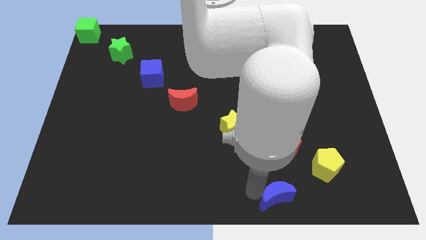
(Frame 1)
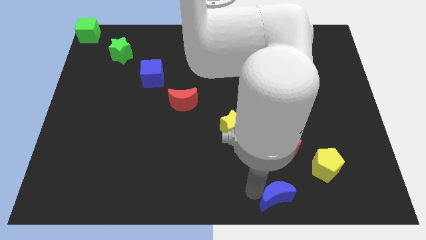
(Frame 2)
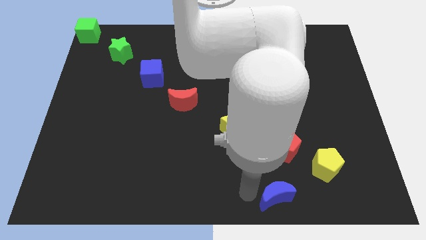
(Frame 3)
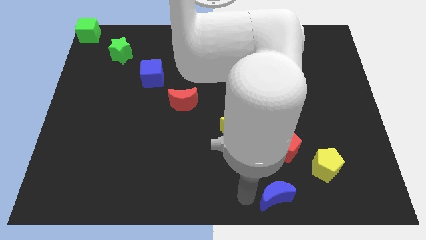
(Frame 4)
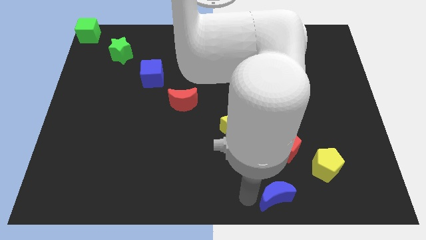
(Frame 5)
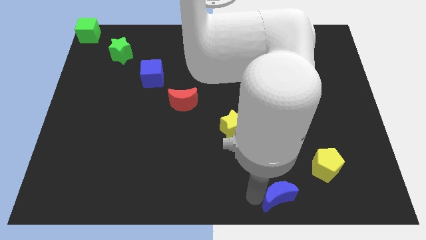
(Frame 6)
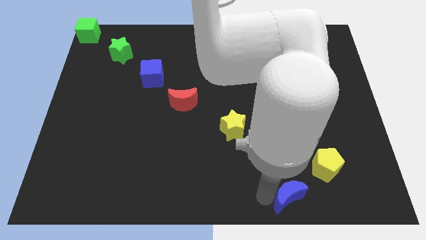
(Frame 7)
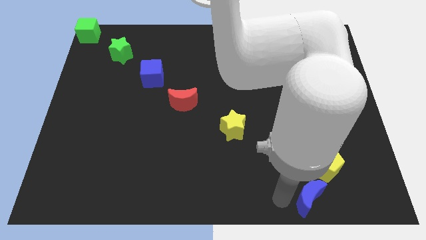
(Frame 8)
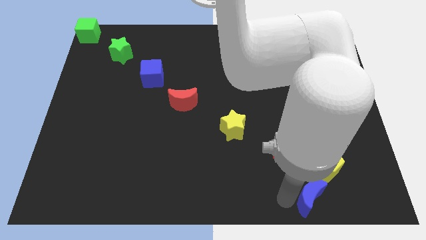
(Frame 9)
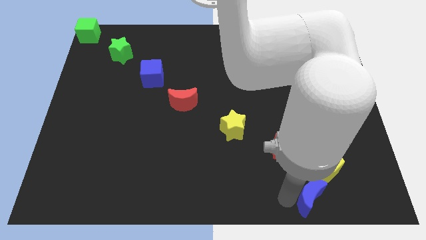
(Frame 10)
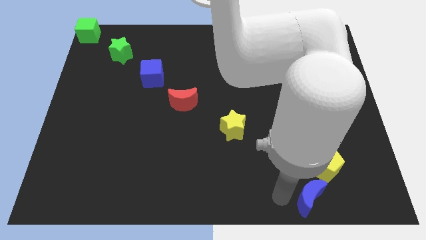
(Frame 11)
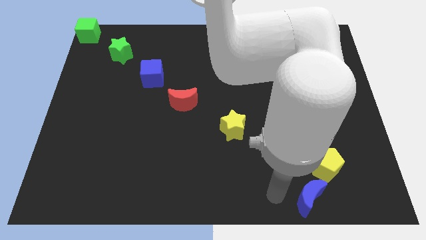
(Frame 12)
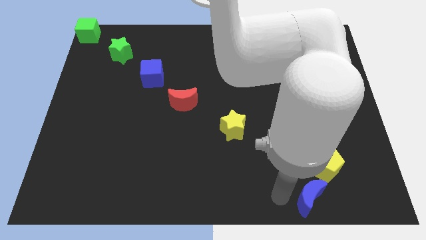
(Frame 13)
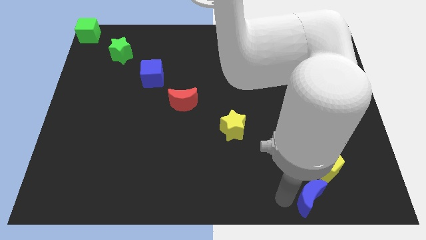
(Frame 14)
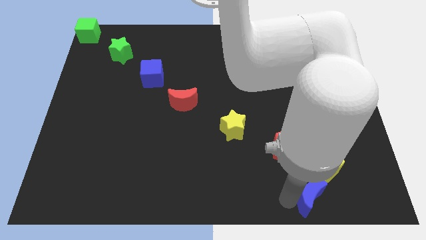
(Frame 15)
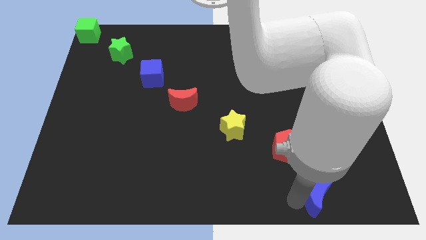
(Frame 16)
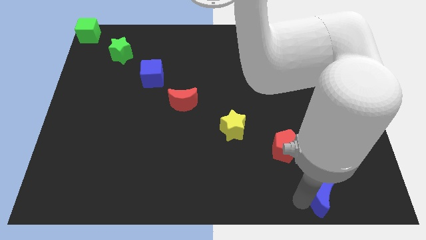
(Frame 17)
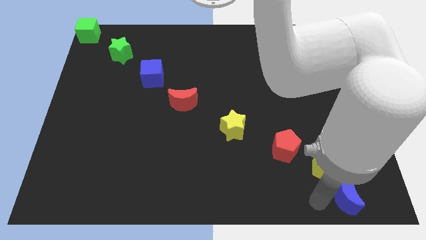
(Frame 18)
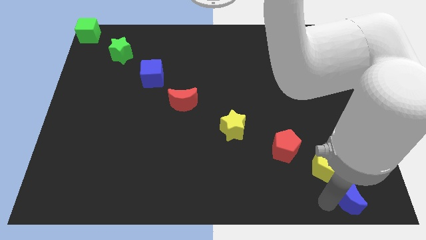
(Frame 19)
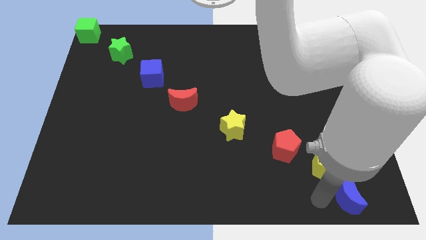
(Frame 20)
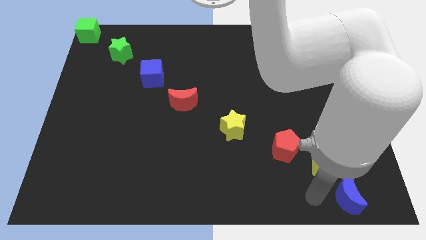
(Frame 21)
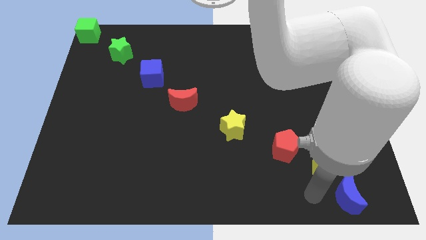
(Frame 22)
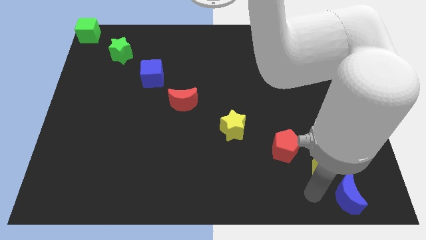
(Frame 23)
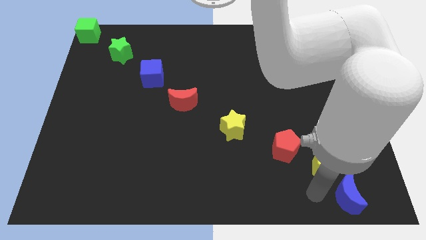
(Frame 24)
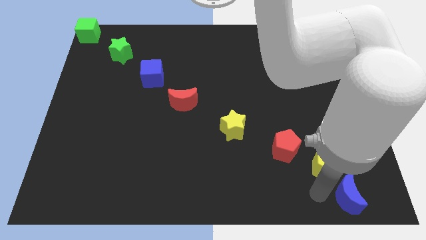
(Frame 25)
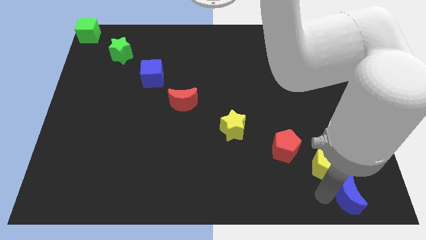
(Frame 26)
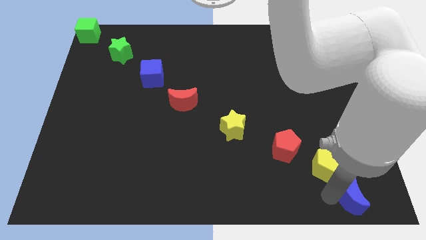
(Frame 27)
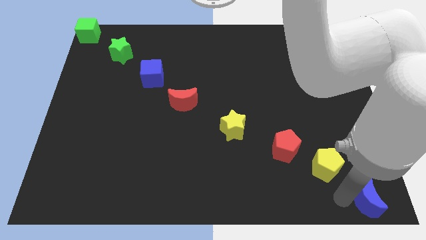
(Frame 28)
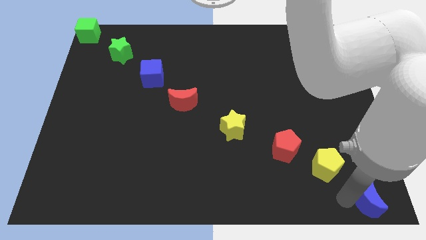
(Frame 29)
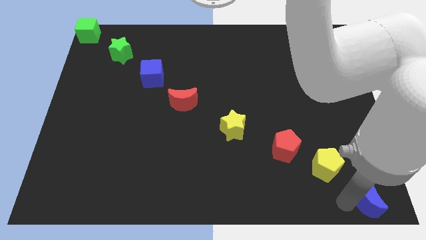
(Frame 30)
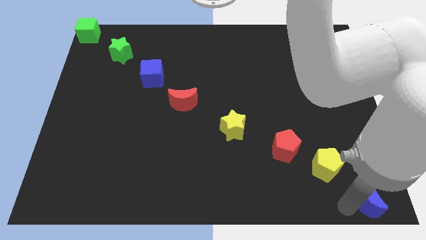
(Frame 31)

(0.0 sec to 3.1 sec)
move the blue crescent to the right bottom

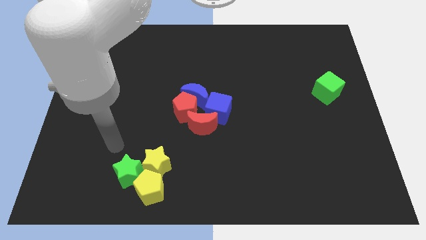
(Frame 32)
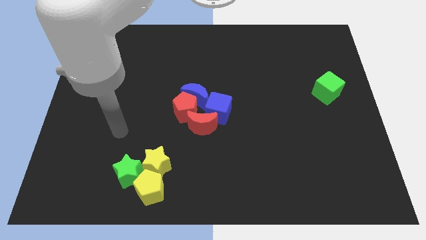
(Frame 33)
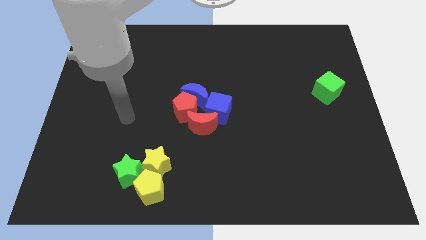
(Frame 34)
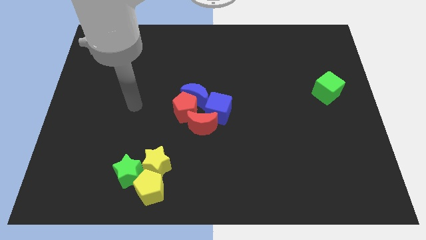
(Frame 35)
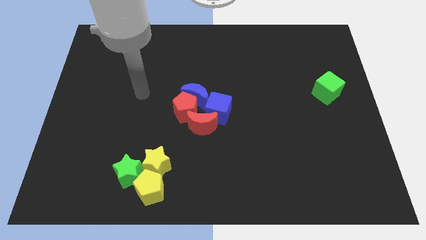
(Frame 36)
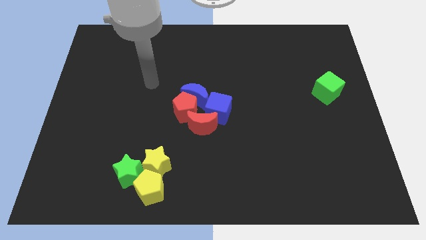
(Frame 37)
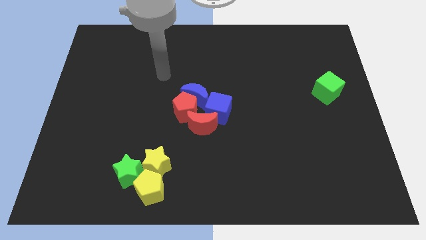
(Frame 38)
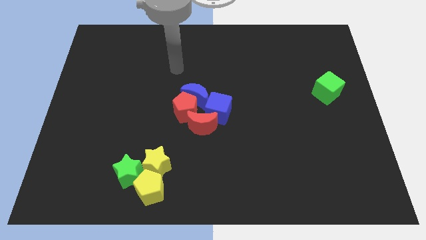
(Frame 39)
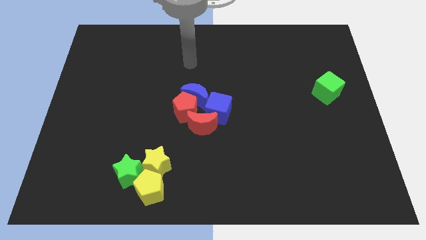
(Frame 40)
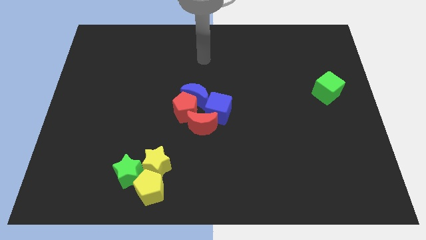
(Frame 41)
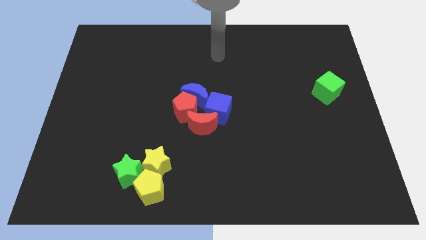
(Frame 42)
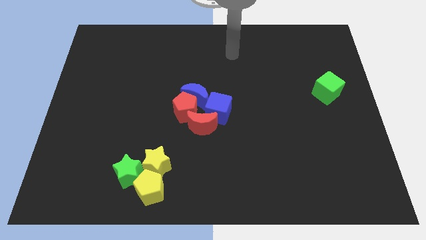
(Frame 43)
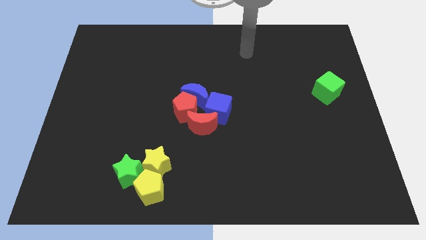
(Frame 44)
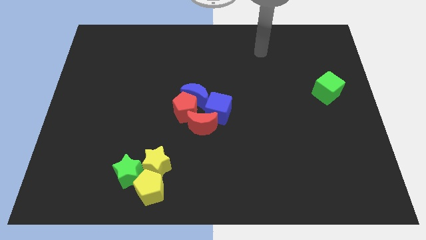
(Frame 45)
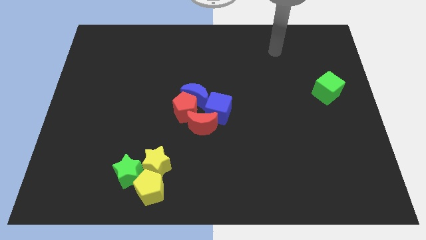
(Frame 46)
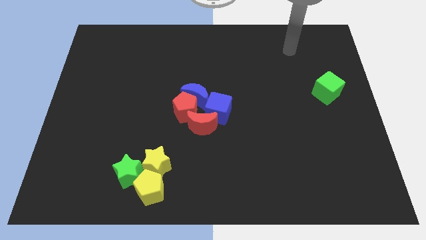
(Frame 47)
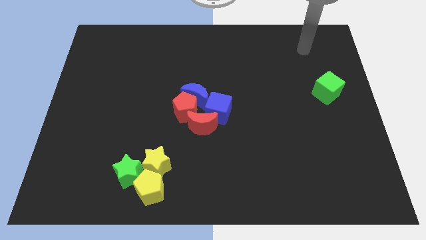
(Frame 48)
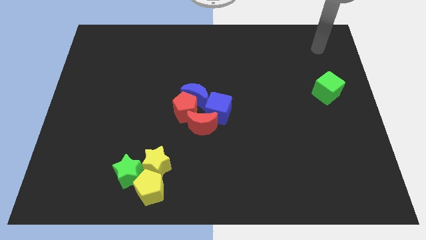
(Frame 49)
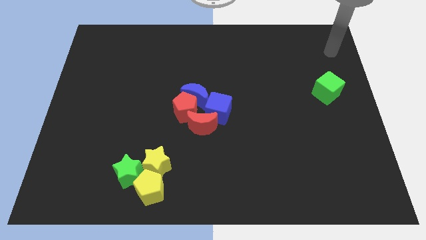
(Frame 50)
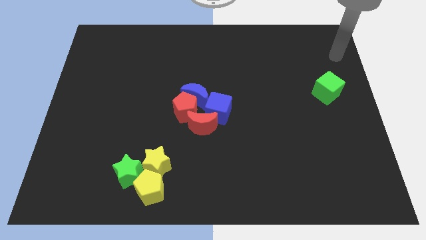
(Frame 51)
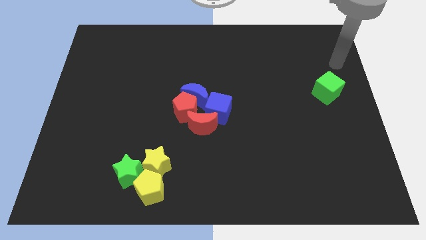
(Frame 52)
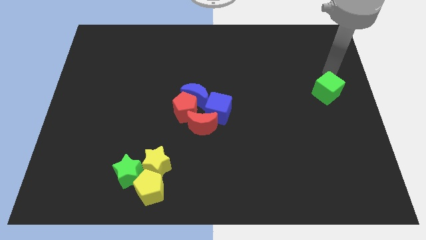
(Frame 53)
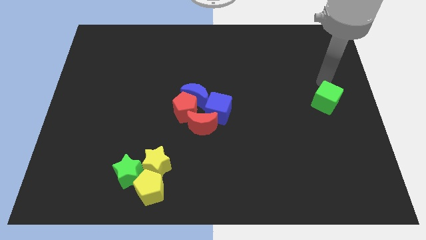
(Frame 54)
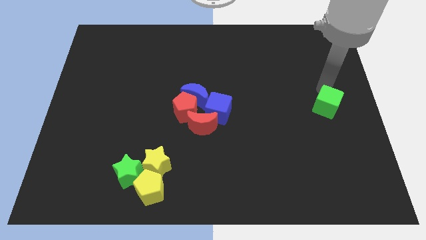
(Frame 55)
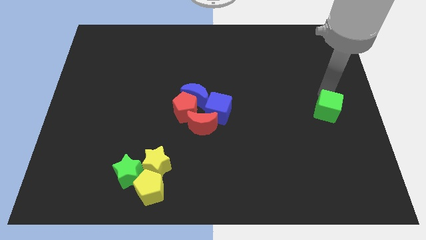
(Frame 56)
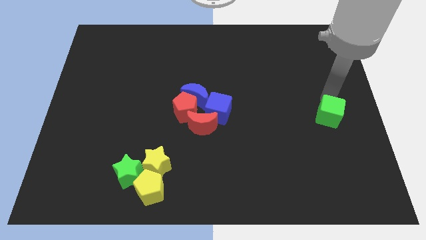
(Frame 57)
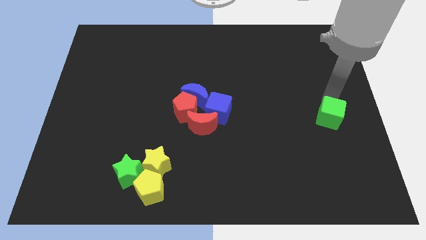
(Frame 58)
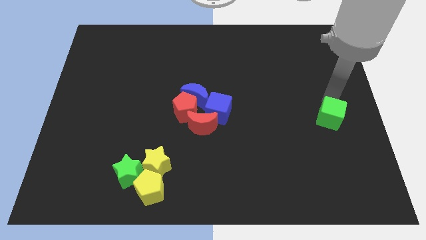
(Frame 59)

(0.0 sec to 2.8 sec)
move the green cube horizontally to the right side of the blue cube

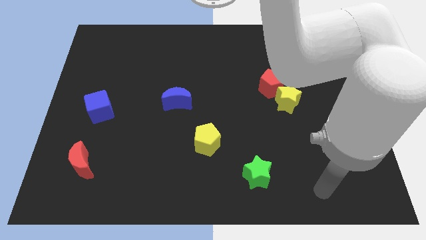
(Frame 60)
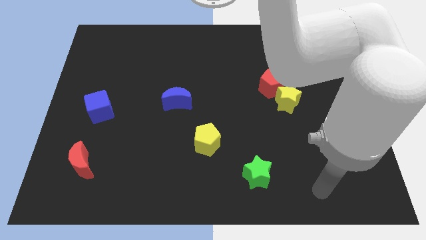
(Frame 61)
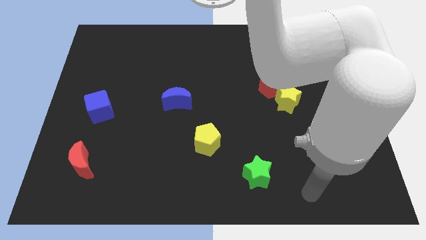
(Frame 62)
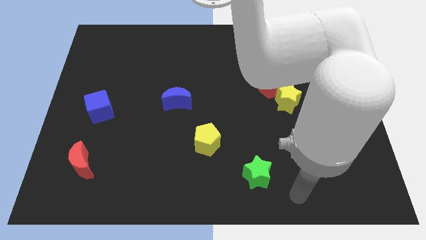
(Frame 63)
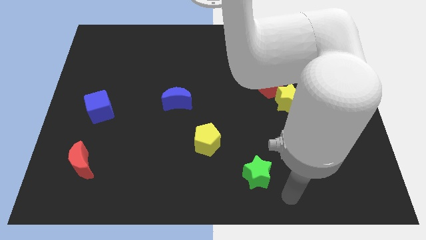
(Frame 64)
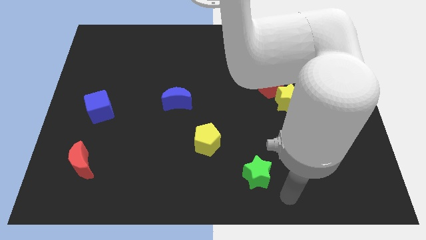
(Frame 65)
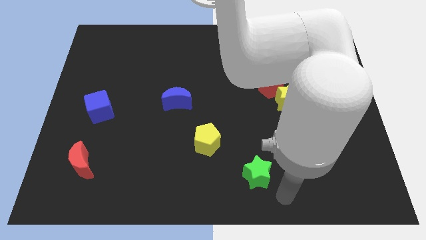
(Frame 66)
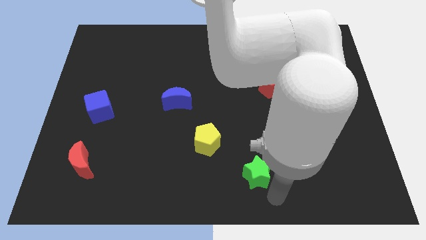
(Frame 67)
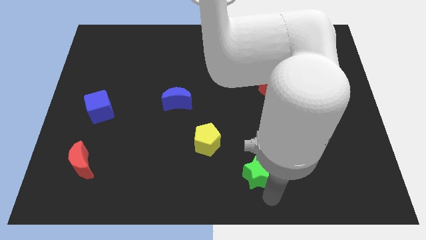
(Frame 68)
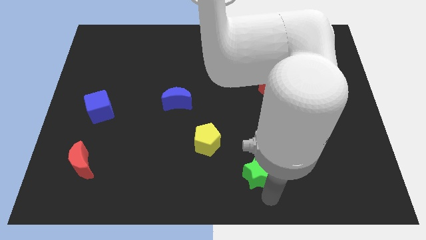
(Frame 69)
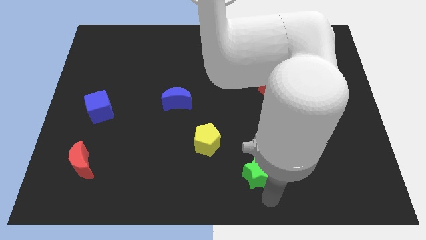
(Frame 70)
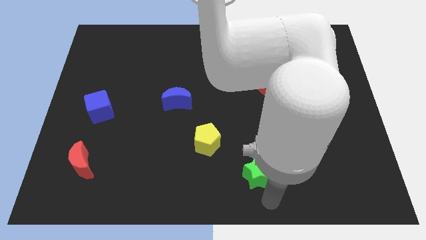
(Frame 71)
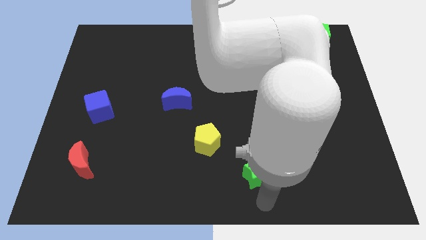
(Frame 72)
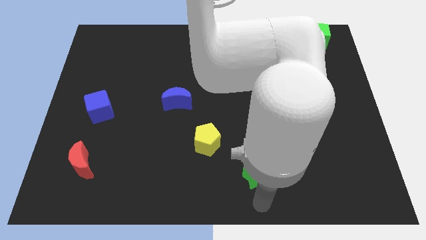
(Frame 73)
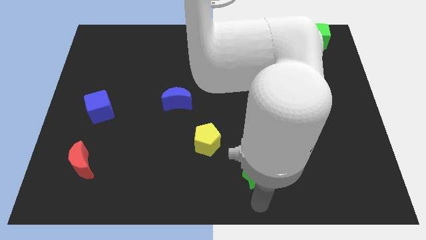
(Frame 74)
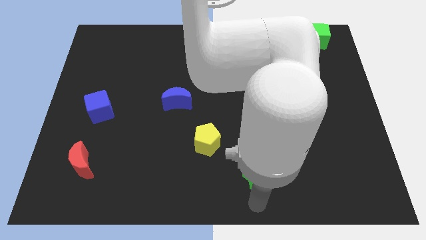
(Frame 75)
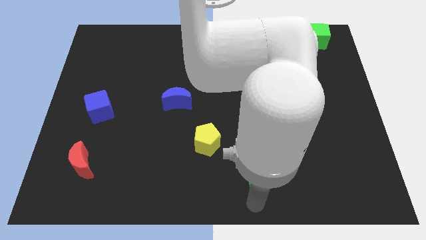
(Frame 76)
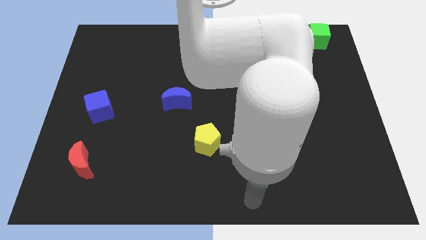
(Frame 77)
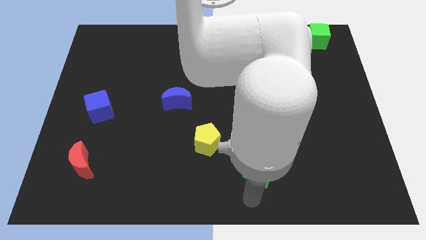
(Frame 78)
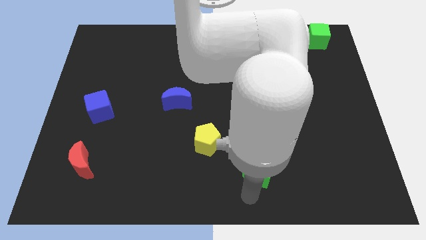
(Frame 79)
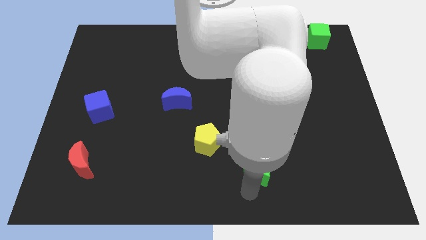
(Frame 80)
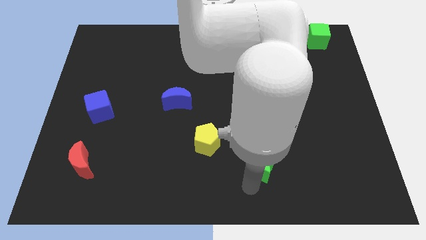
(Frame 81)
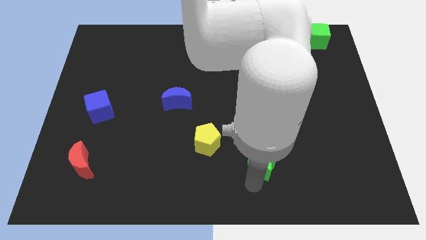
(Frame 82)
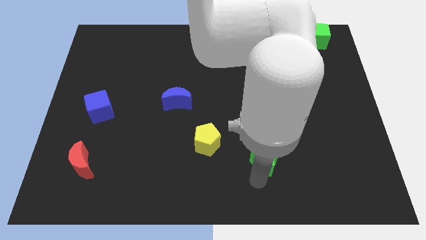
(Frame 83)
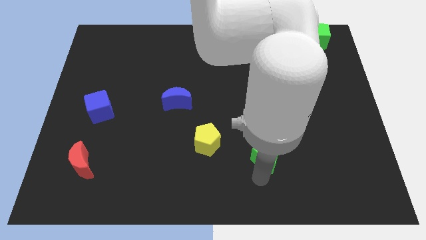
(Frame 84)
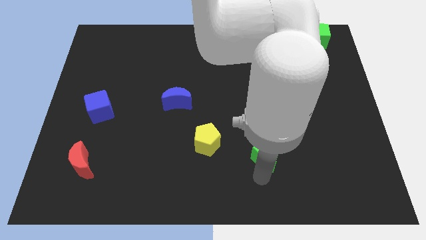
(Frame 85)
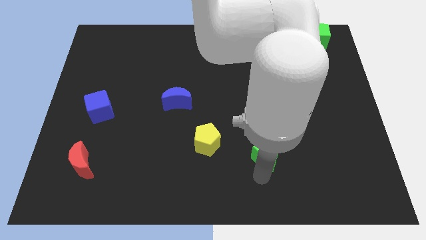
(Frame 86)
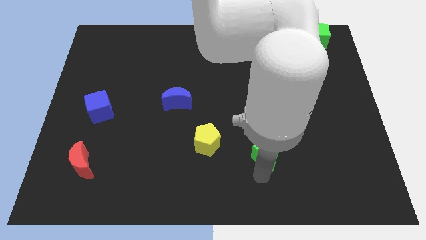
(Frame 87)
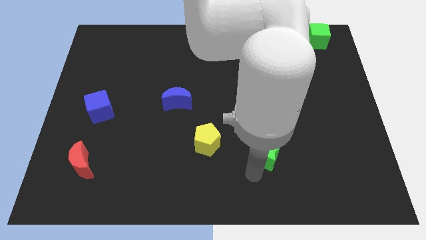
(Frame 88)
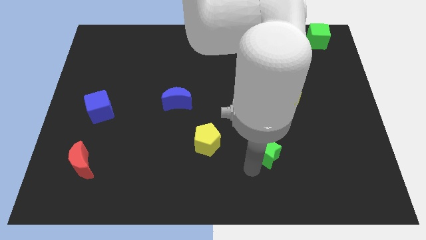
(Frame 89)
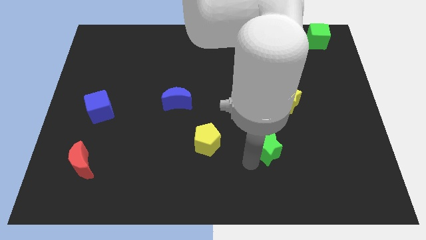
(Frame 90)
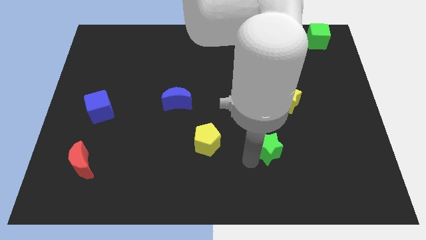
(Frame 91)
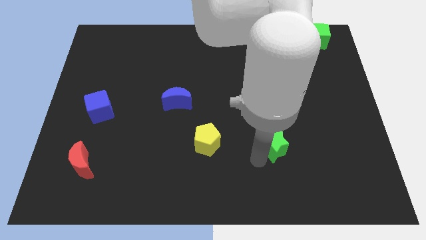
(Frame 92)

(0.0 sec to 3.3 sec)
move the green star parallel to the right of the yellow pentagon
